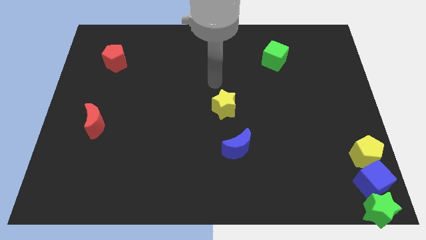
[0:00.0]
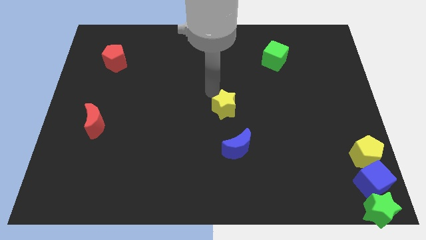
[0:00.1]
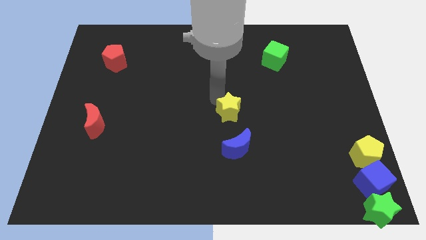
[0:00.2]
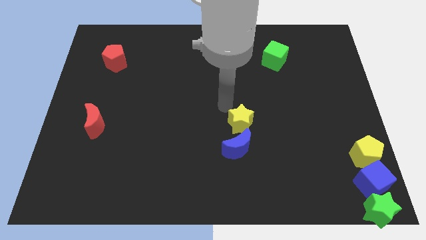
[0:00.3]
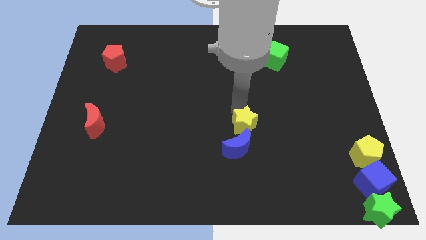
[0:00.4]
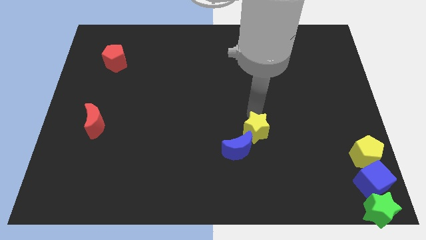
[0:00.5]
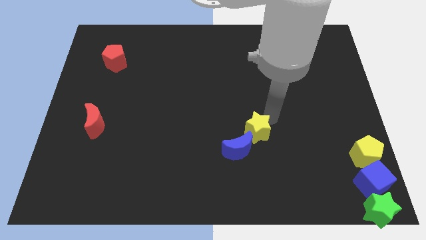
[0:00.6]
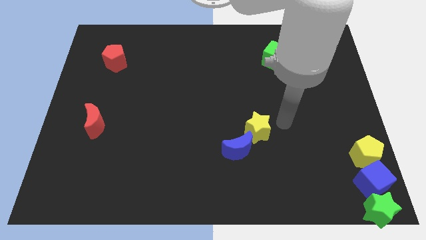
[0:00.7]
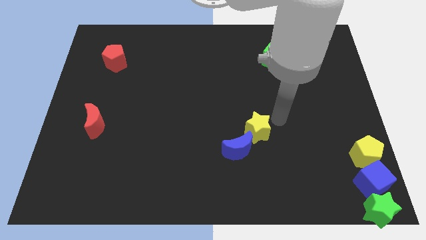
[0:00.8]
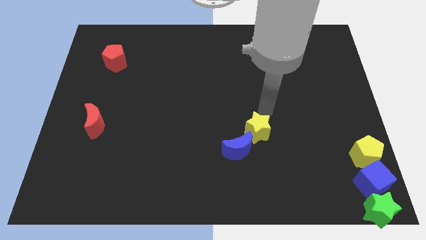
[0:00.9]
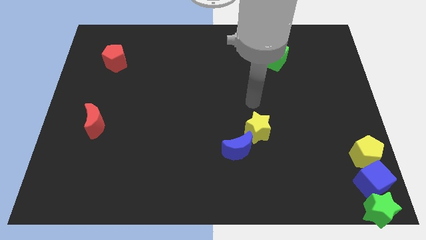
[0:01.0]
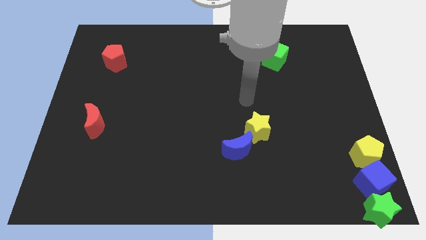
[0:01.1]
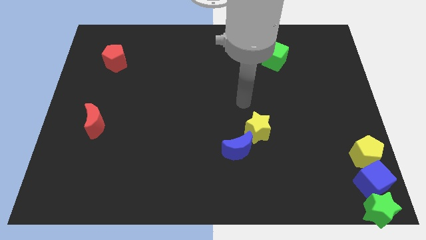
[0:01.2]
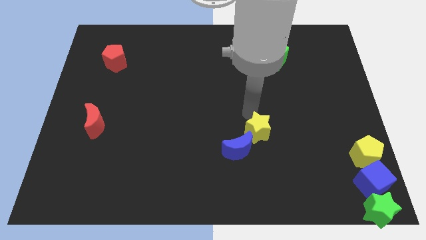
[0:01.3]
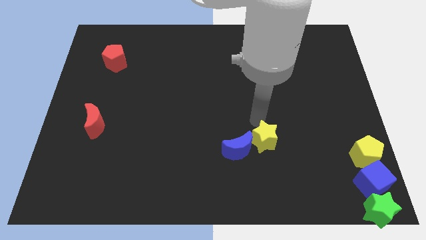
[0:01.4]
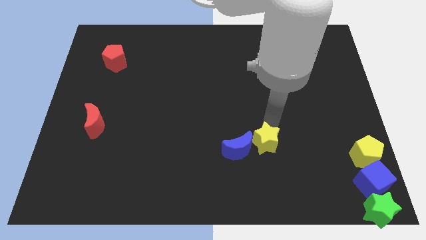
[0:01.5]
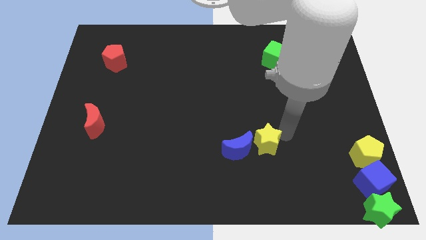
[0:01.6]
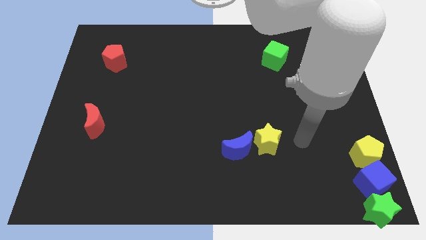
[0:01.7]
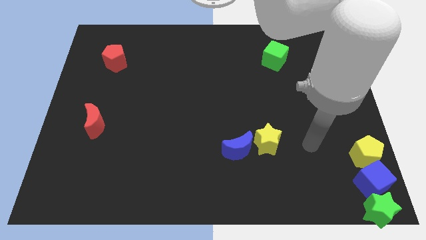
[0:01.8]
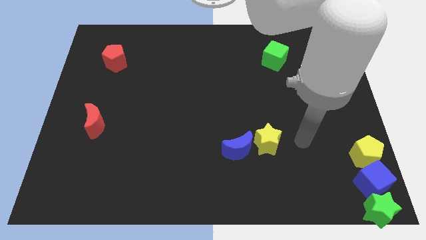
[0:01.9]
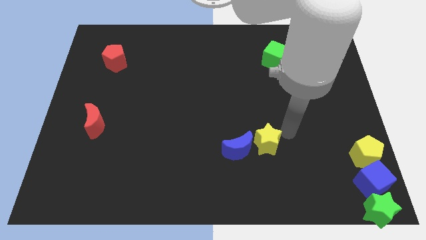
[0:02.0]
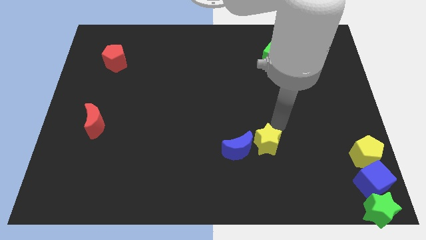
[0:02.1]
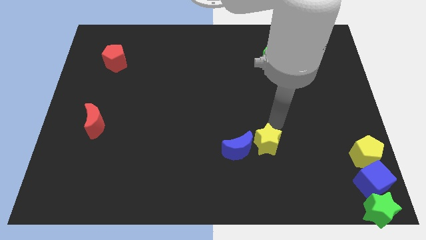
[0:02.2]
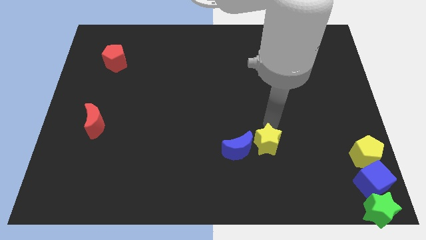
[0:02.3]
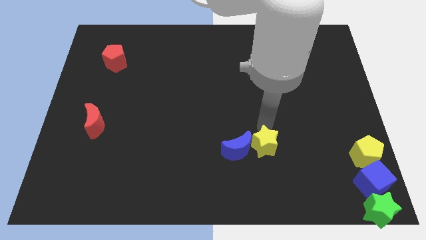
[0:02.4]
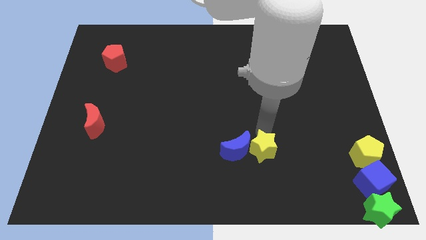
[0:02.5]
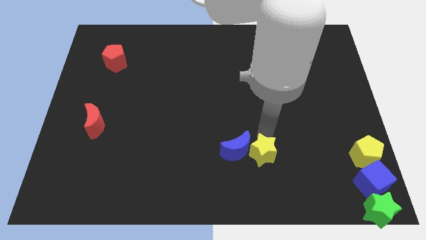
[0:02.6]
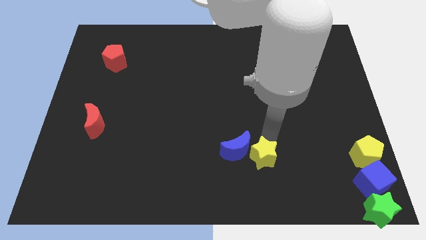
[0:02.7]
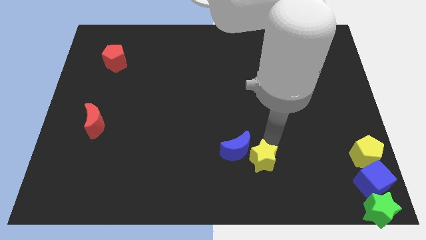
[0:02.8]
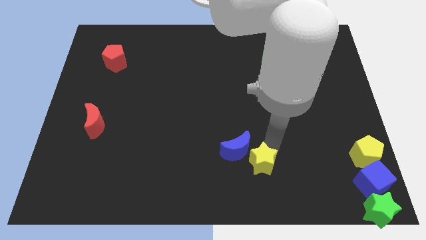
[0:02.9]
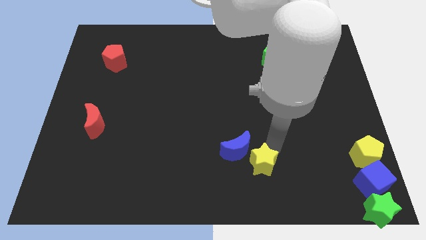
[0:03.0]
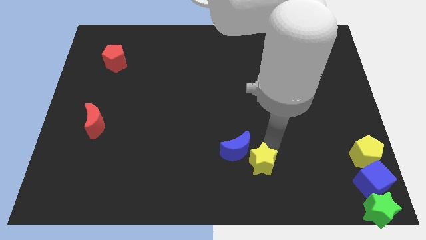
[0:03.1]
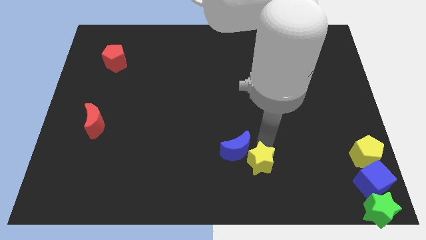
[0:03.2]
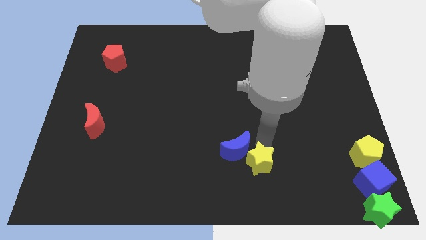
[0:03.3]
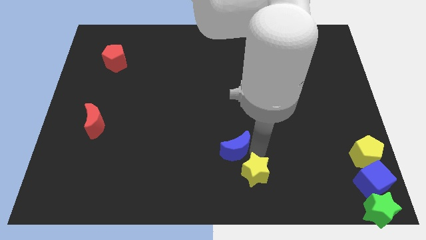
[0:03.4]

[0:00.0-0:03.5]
push the yellow star diagonally below the blue moon

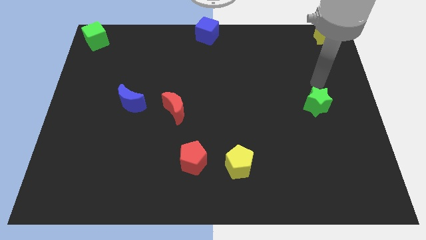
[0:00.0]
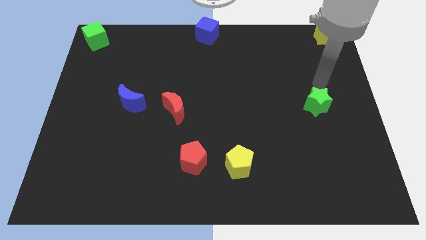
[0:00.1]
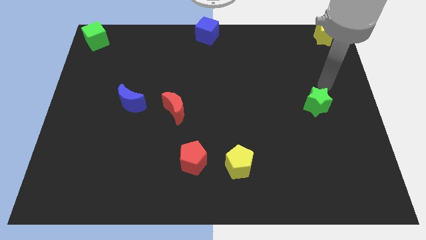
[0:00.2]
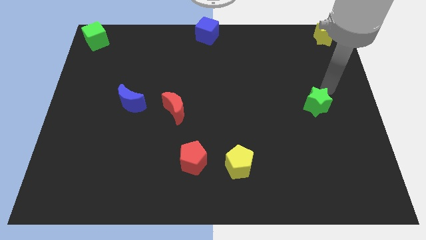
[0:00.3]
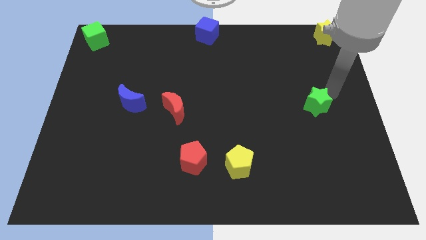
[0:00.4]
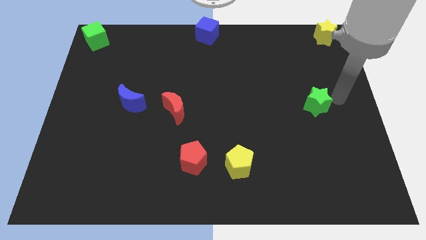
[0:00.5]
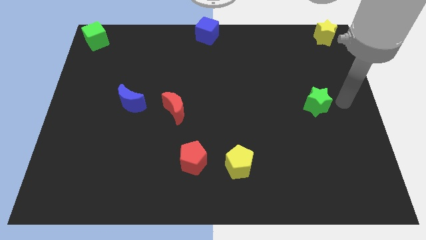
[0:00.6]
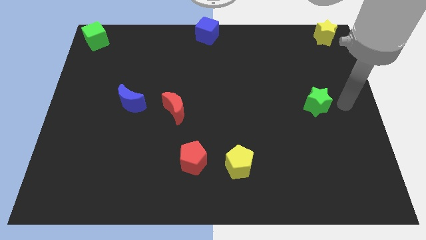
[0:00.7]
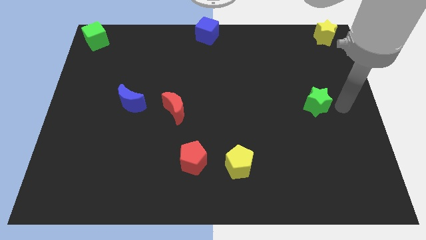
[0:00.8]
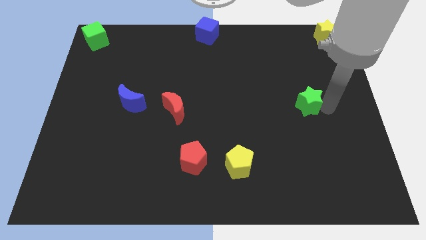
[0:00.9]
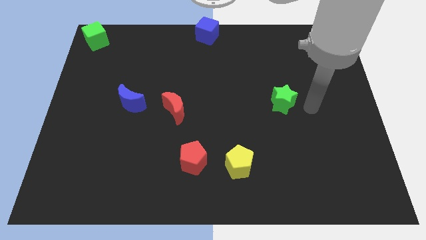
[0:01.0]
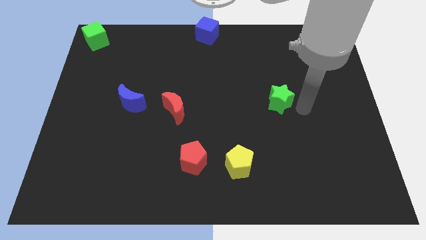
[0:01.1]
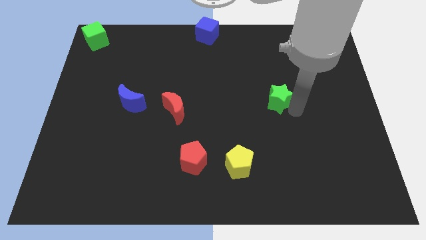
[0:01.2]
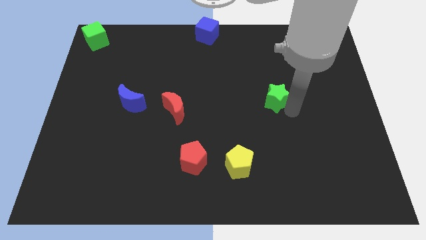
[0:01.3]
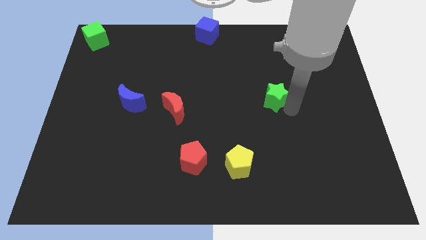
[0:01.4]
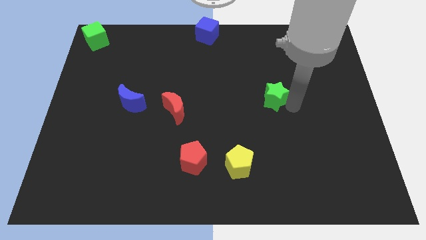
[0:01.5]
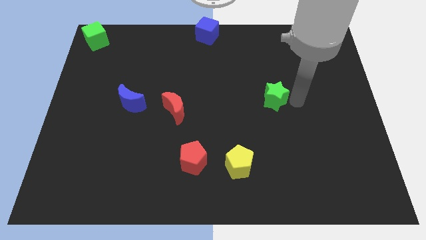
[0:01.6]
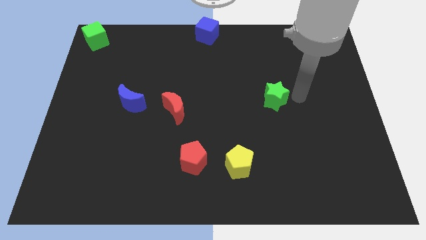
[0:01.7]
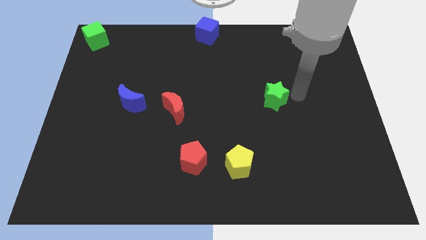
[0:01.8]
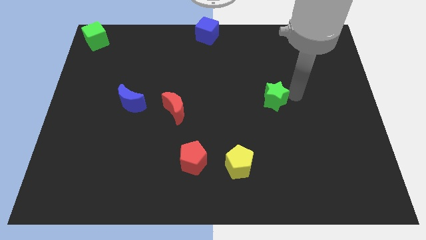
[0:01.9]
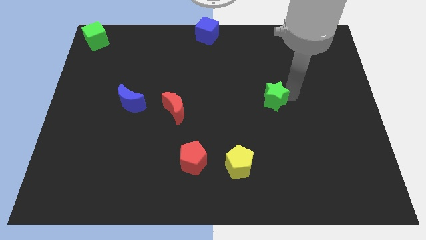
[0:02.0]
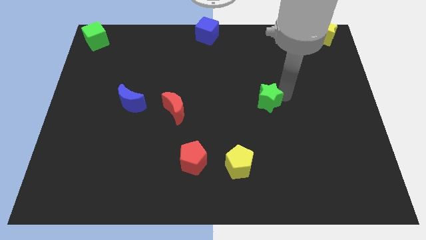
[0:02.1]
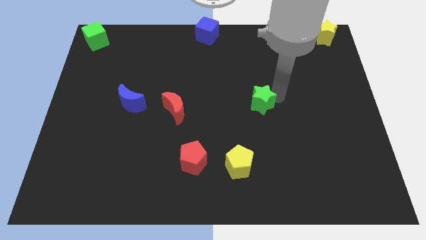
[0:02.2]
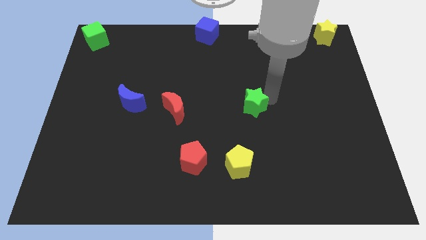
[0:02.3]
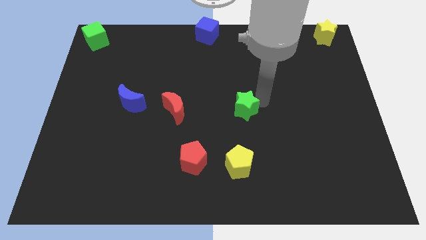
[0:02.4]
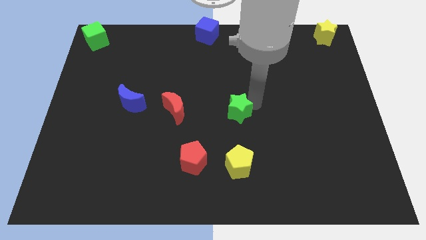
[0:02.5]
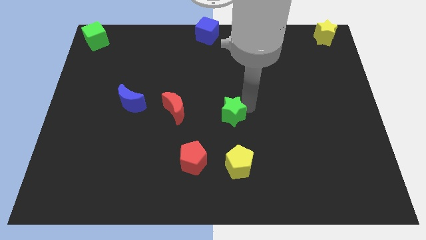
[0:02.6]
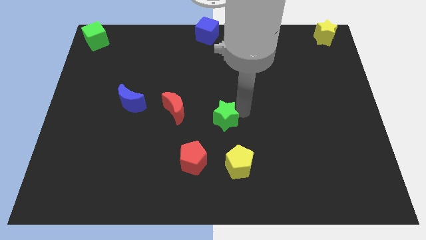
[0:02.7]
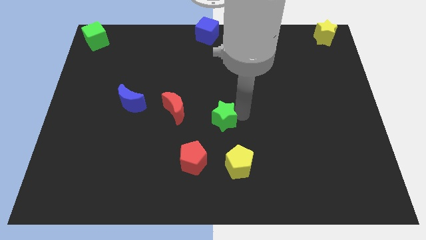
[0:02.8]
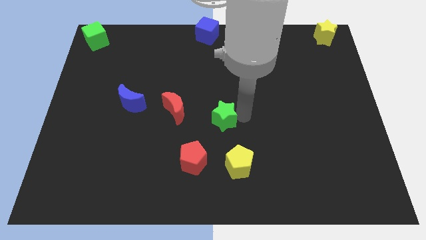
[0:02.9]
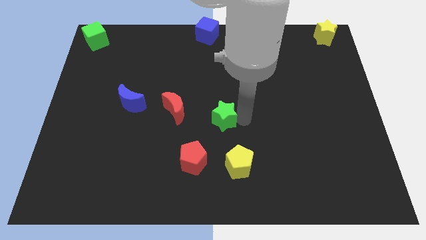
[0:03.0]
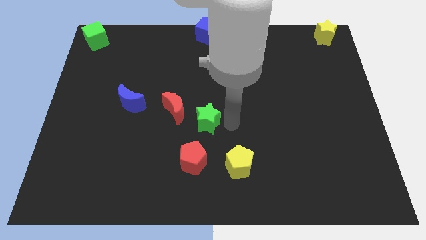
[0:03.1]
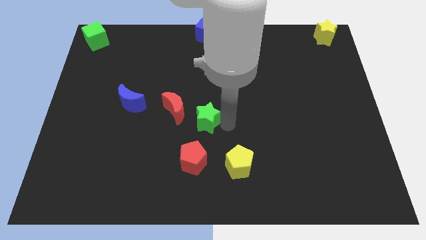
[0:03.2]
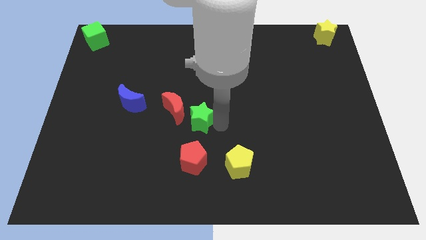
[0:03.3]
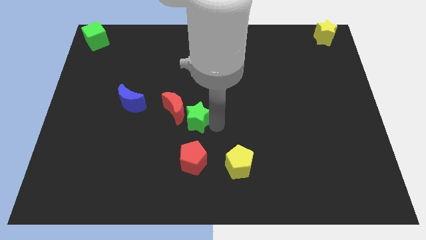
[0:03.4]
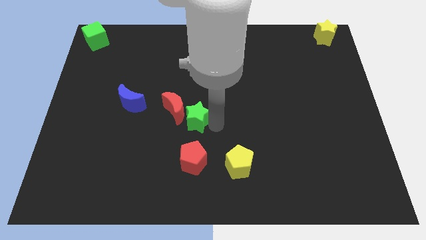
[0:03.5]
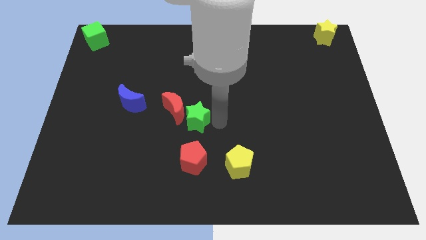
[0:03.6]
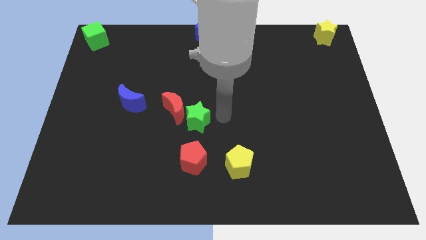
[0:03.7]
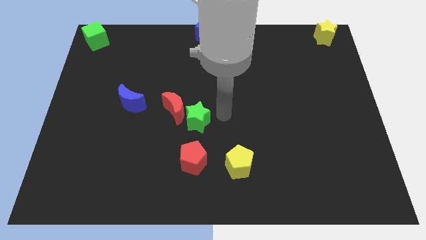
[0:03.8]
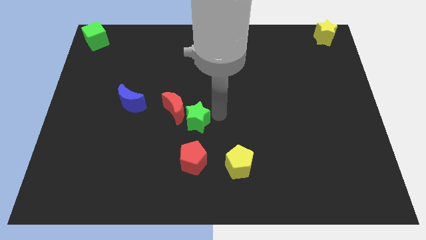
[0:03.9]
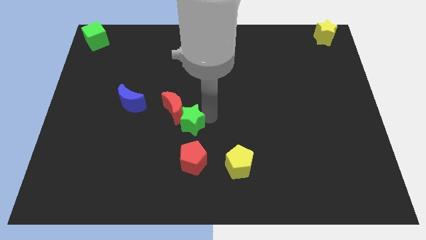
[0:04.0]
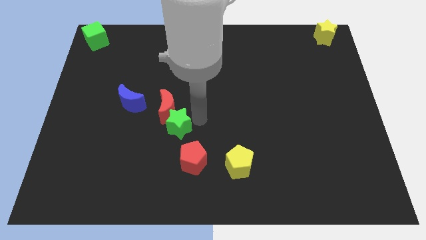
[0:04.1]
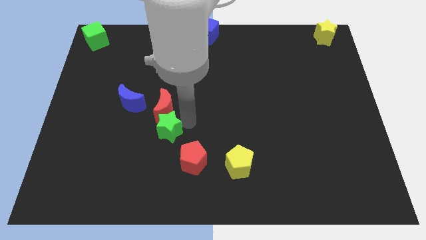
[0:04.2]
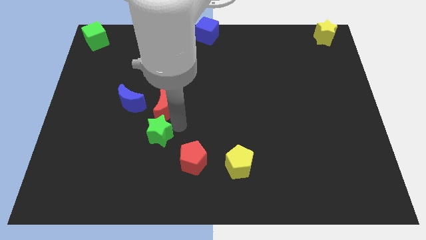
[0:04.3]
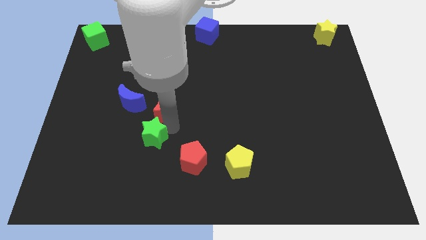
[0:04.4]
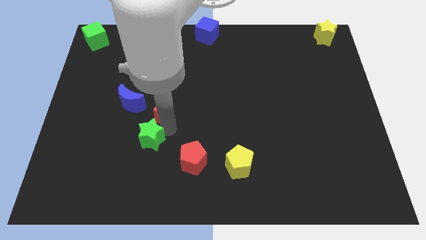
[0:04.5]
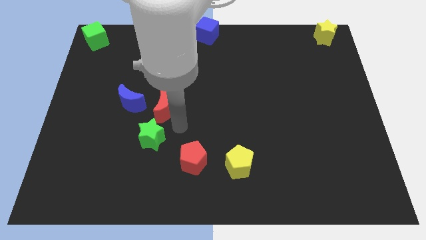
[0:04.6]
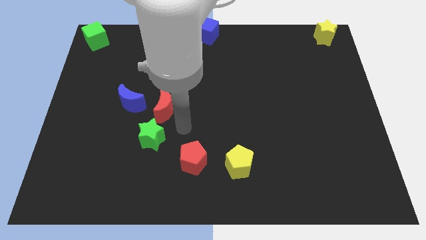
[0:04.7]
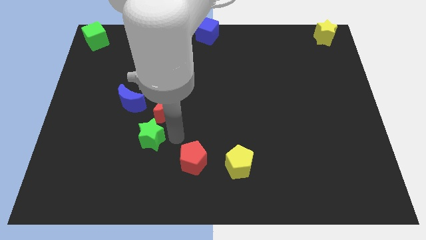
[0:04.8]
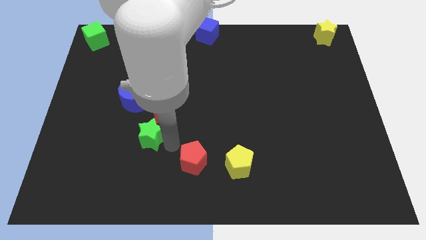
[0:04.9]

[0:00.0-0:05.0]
push green star into the red moon

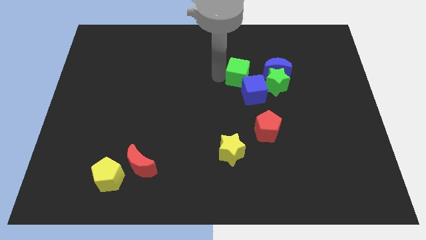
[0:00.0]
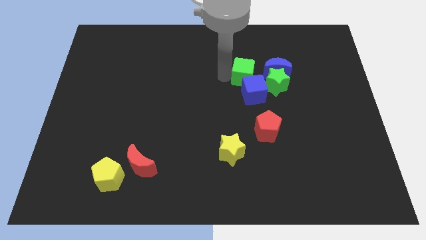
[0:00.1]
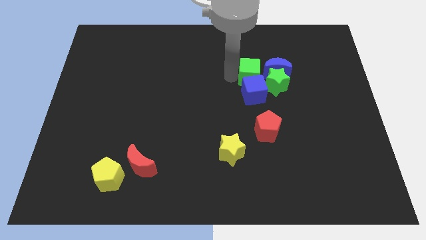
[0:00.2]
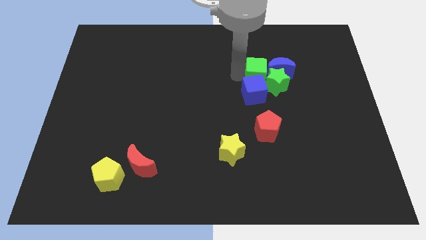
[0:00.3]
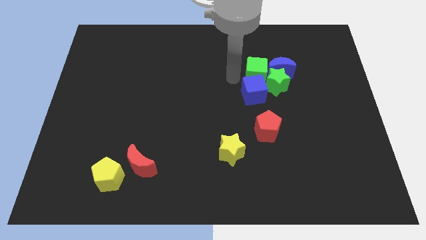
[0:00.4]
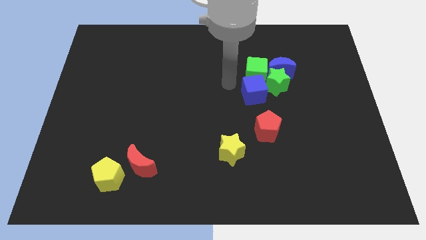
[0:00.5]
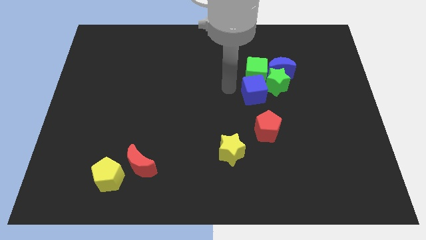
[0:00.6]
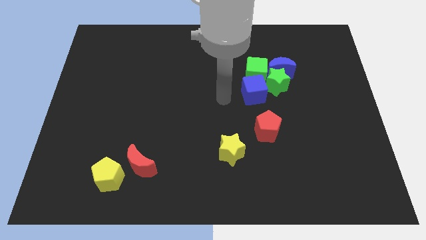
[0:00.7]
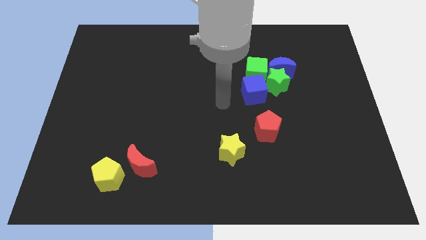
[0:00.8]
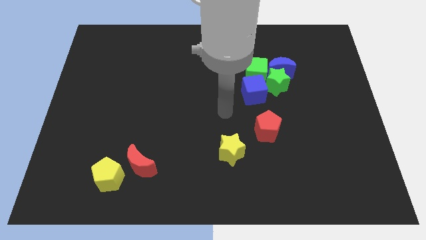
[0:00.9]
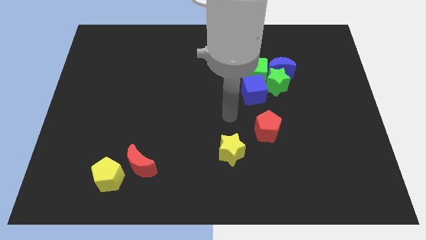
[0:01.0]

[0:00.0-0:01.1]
slide green cube on top of blue cube
